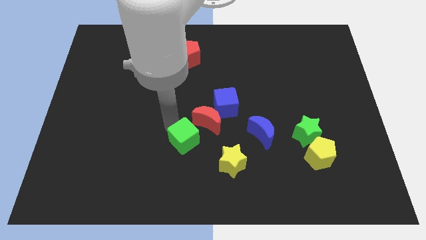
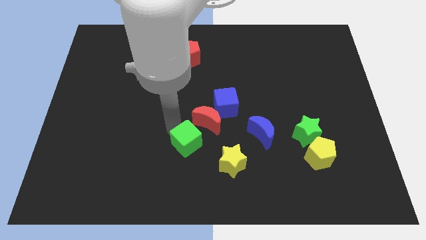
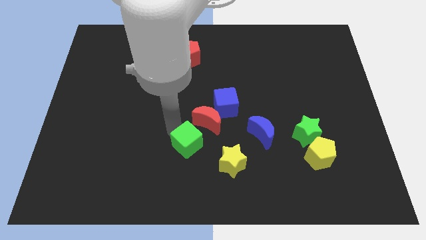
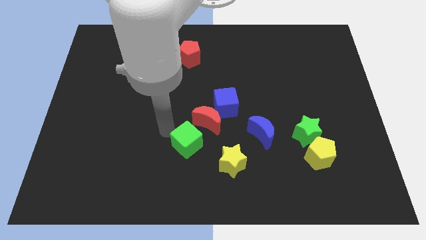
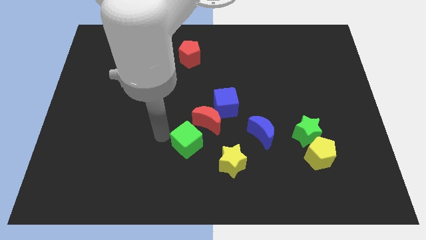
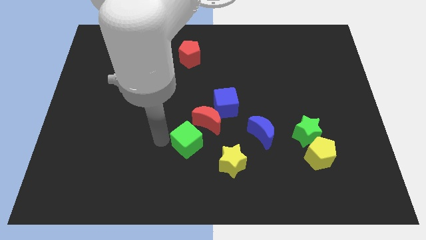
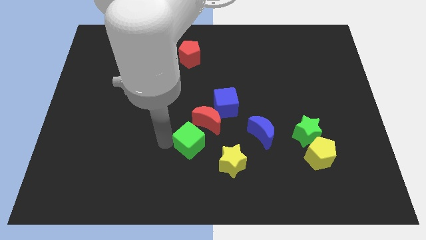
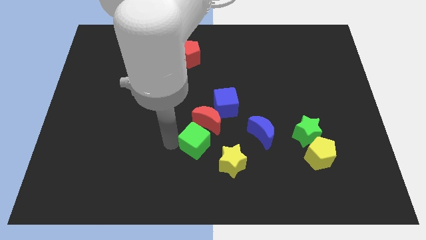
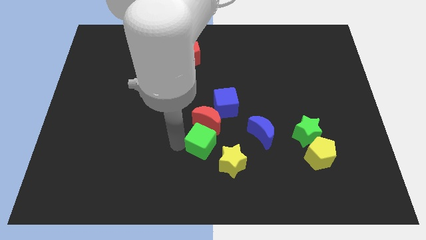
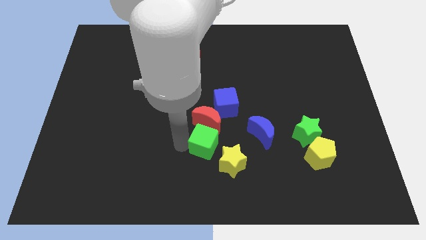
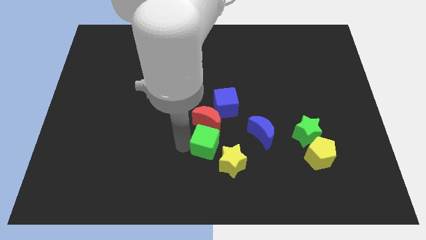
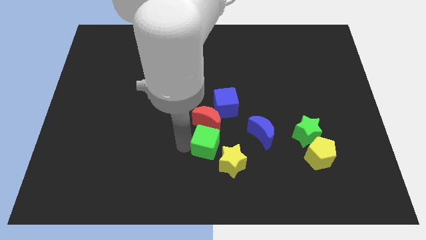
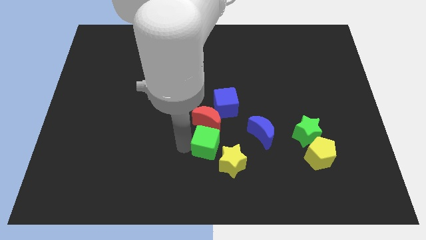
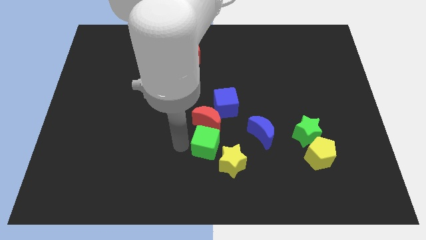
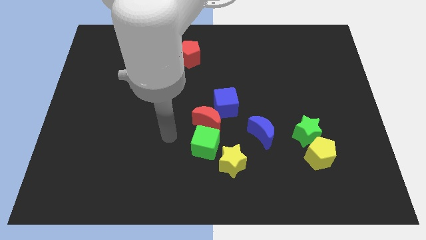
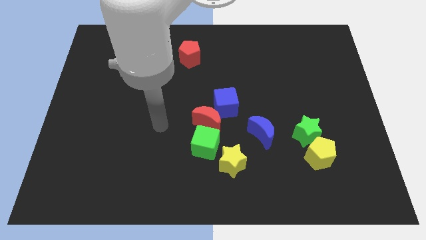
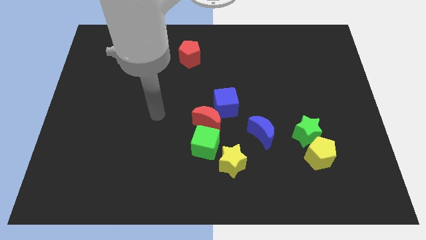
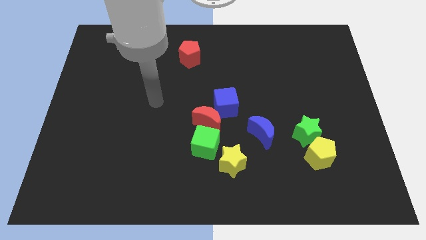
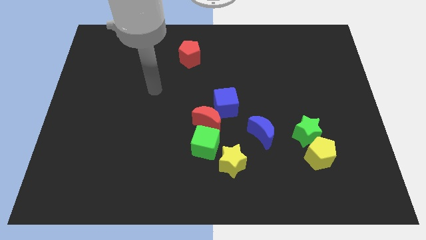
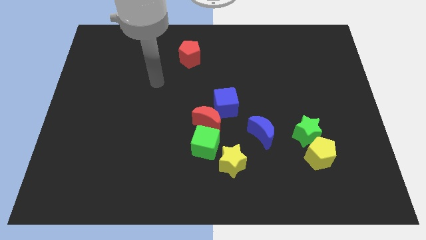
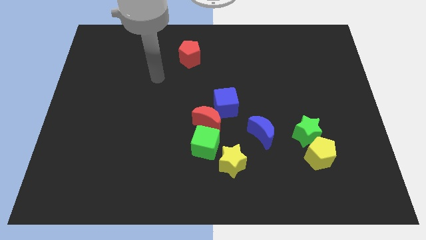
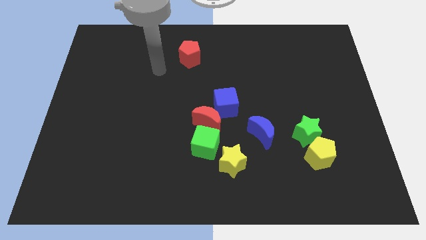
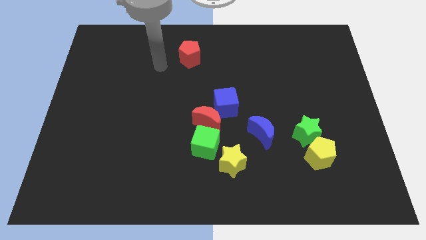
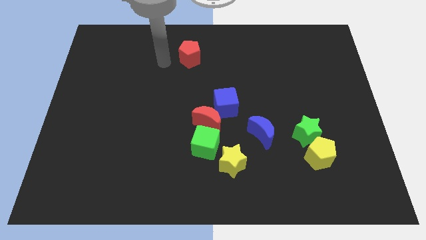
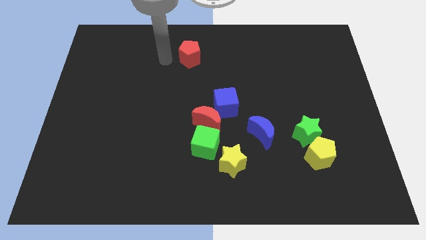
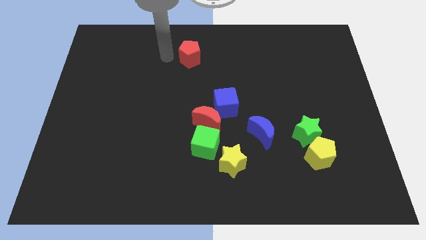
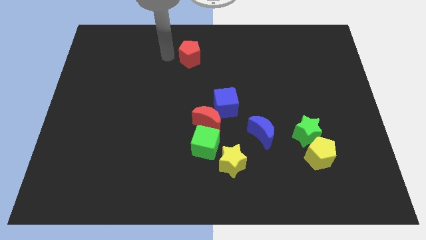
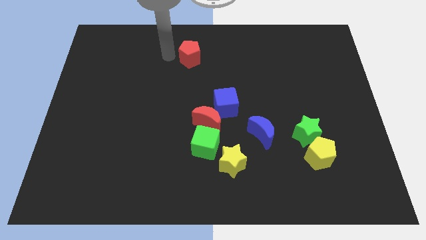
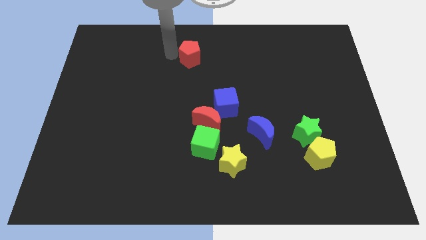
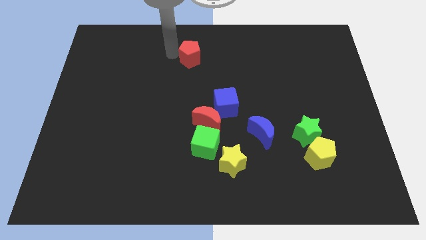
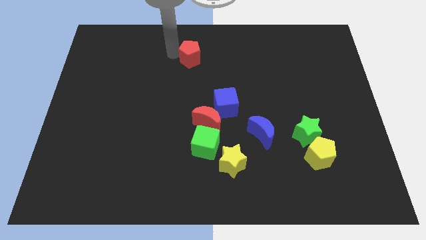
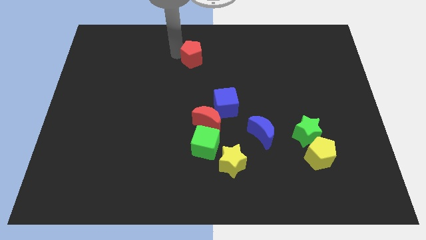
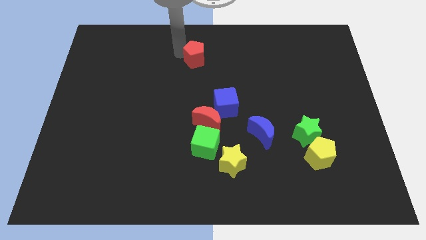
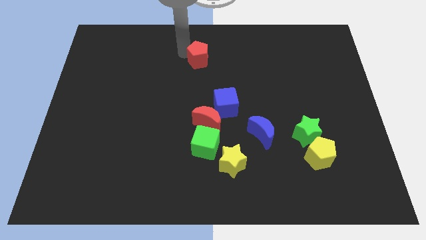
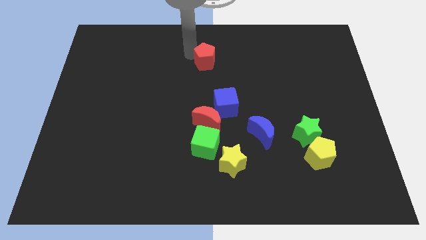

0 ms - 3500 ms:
move your arm to the top left of red pentagon

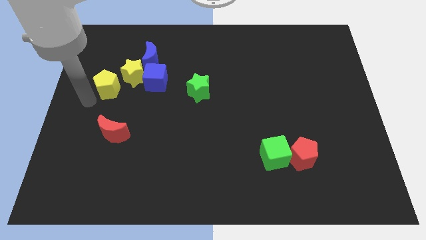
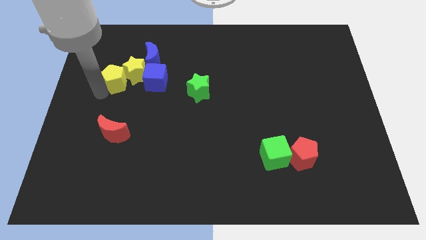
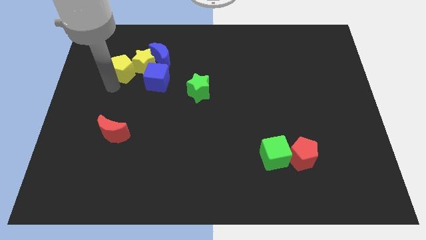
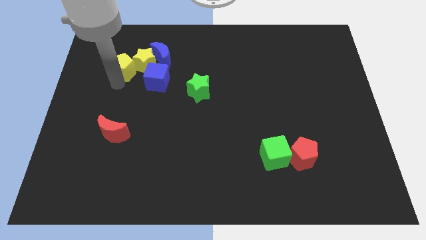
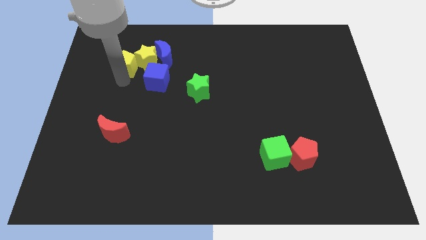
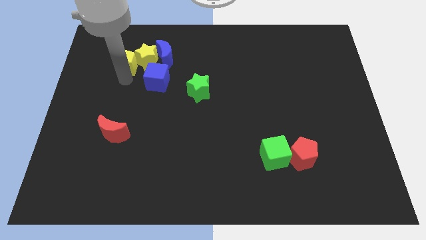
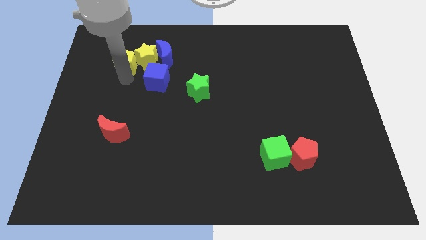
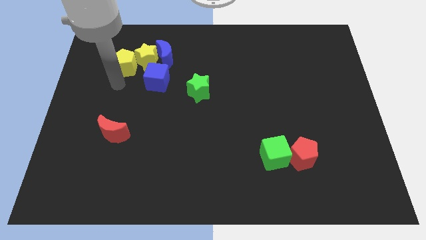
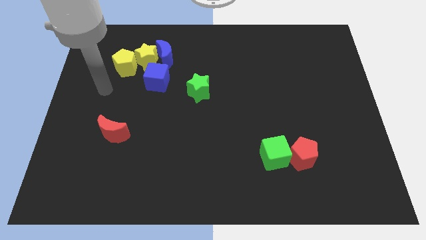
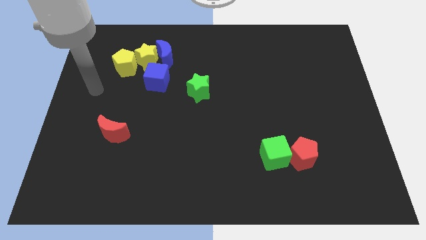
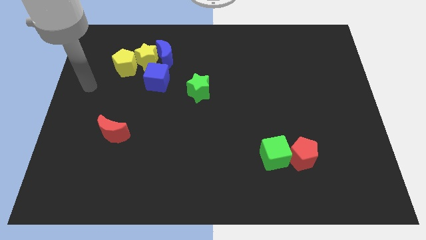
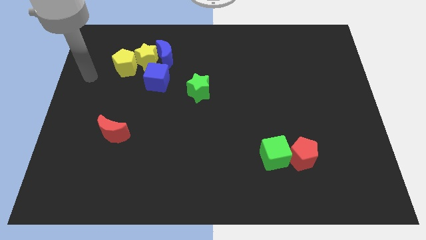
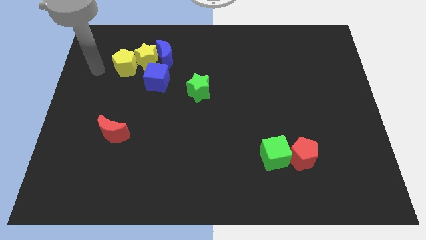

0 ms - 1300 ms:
push the yellow blocks slightly to the top right side of the board

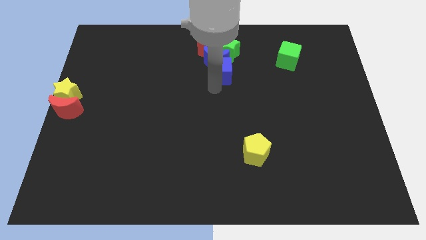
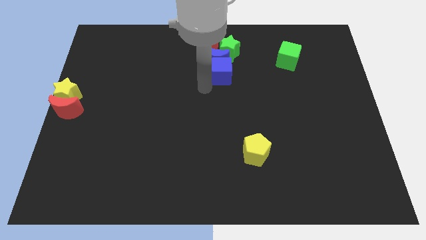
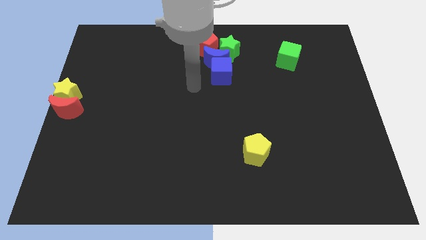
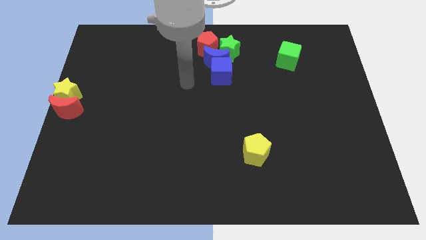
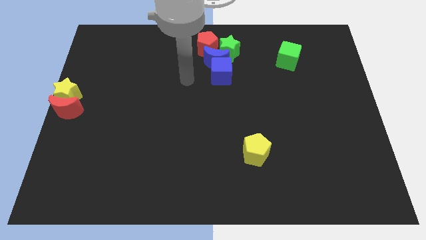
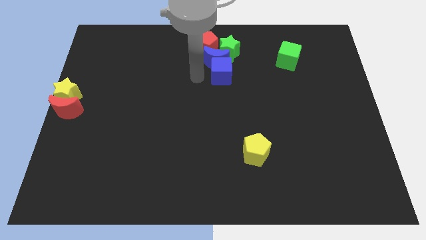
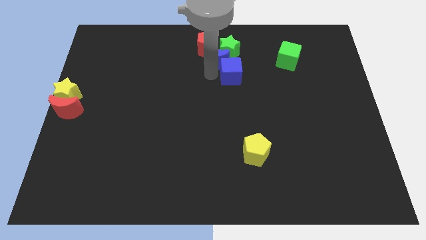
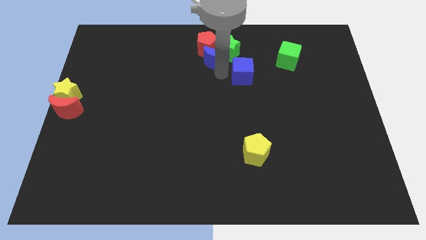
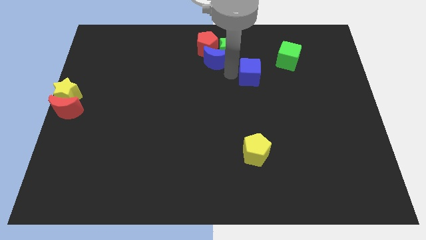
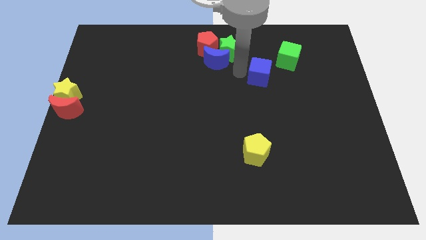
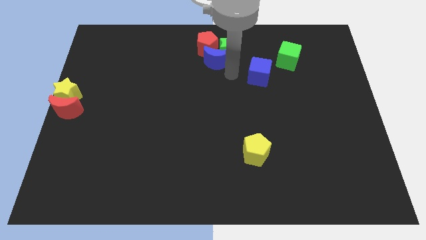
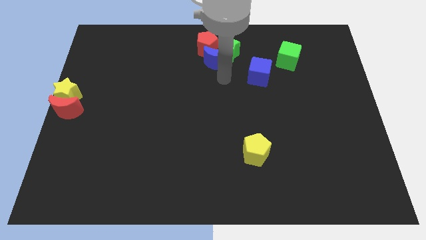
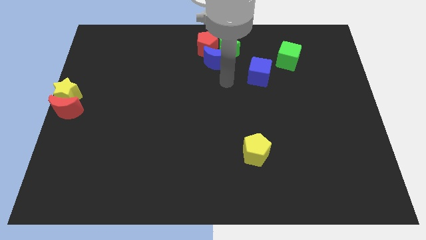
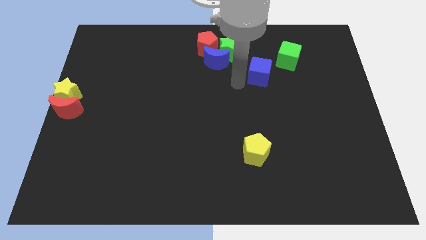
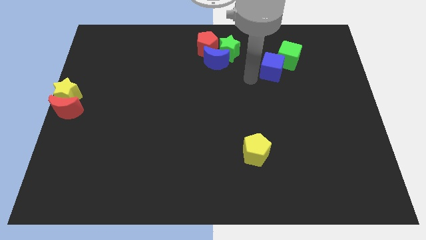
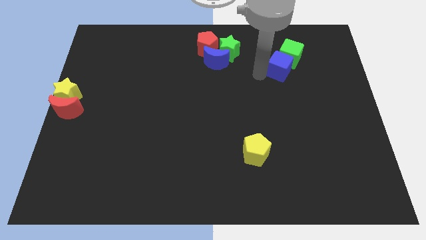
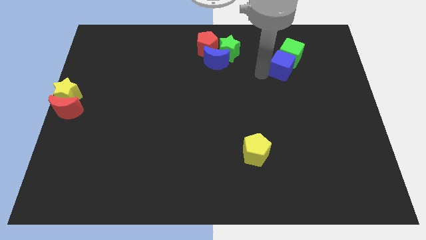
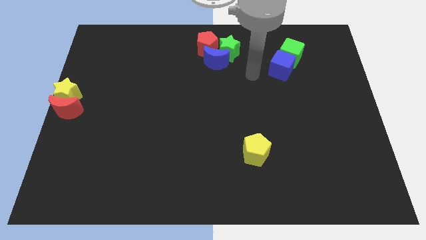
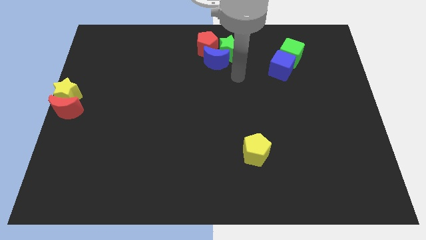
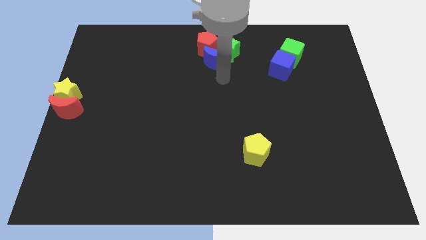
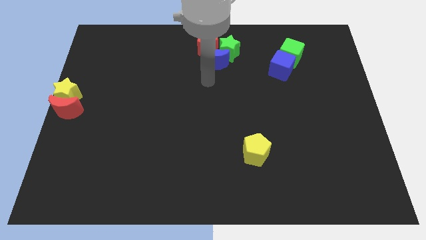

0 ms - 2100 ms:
move the blue cube into the green cube

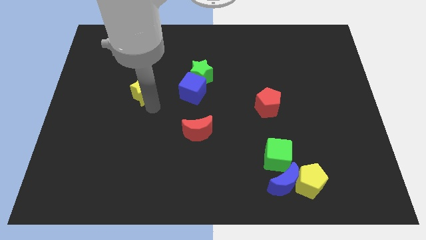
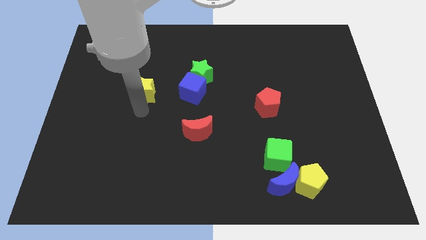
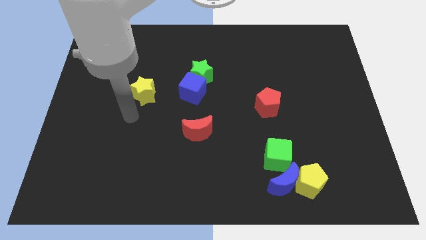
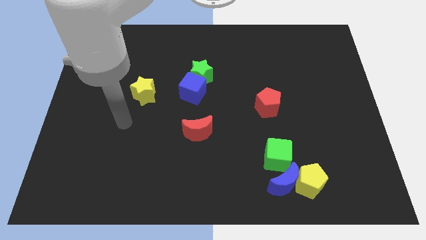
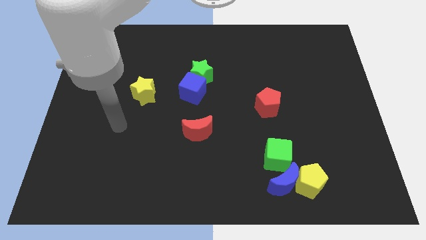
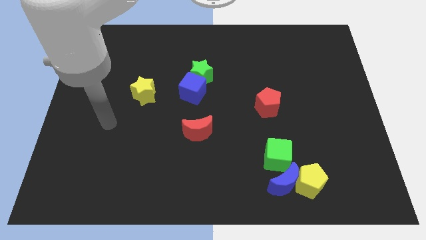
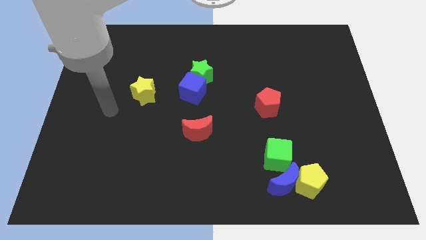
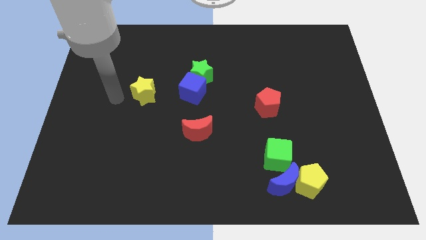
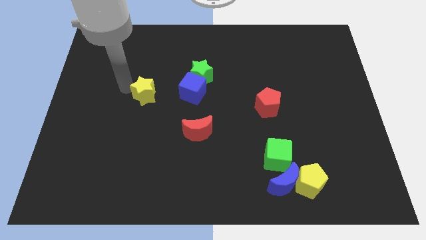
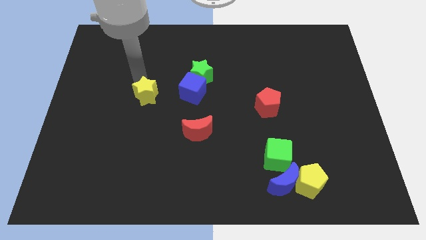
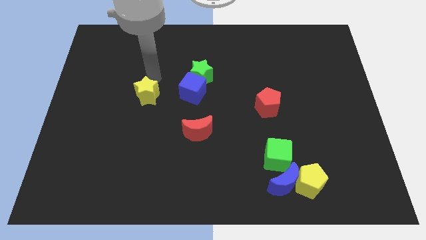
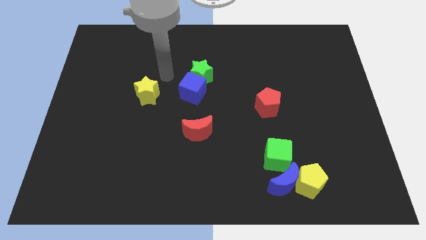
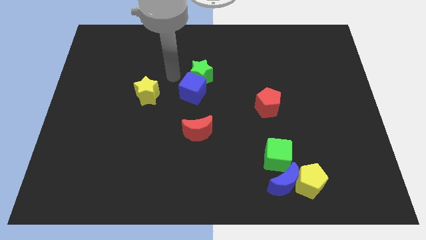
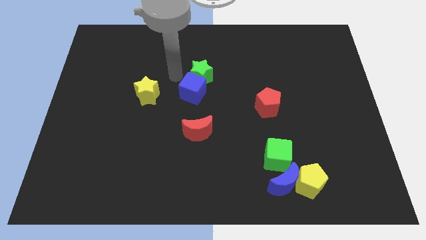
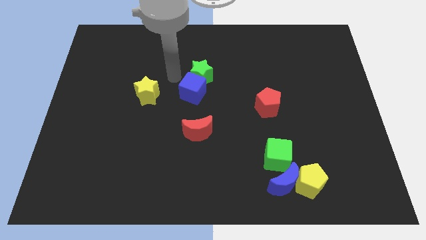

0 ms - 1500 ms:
move the arm above the yellow star

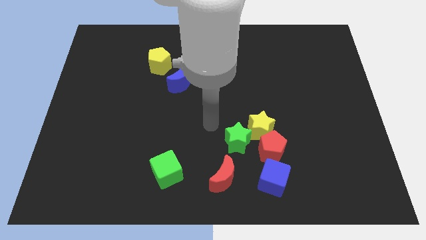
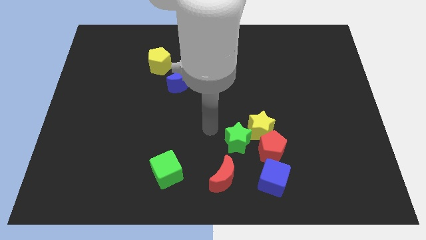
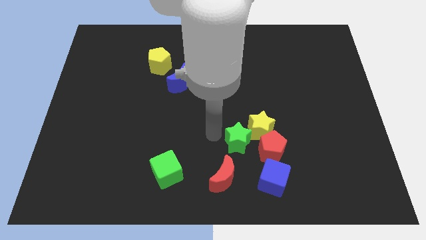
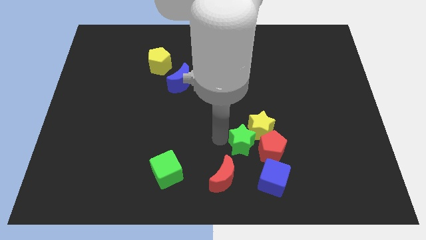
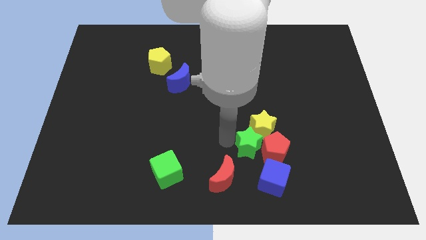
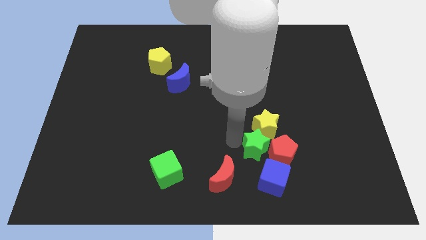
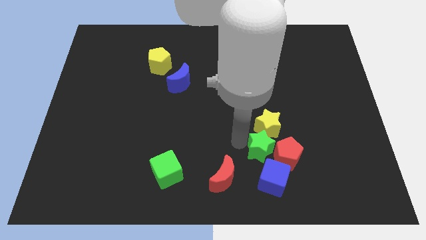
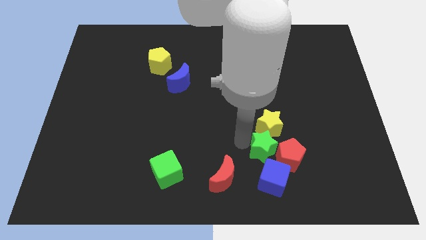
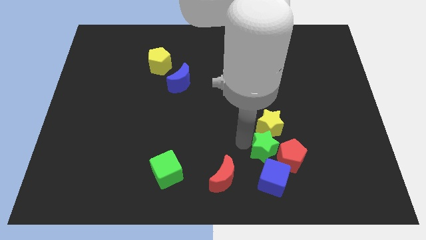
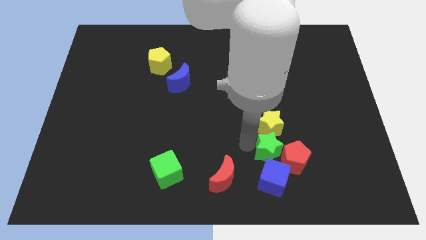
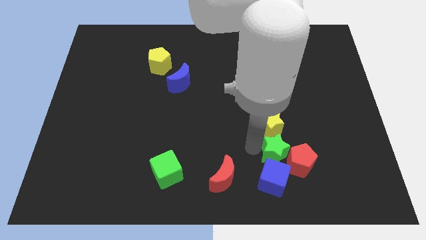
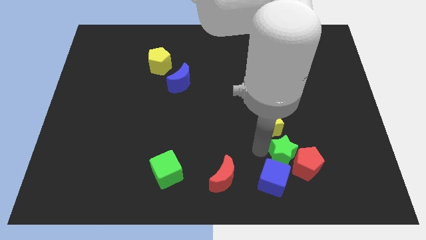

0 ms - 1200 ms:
move the green star down to the yellow star
